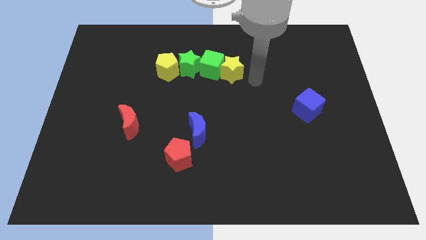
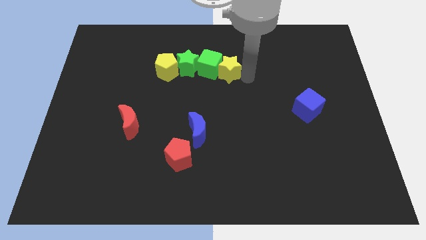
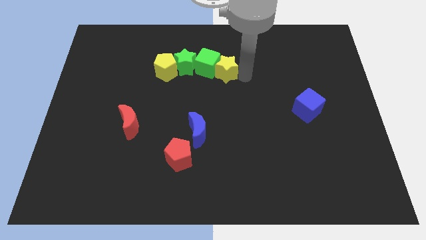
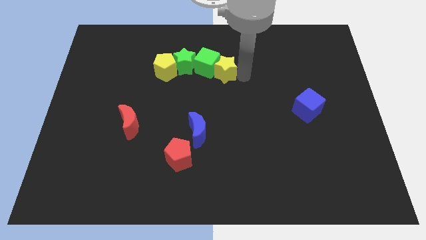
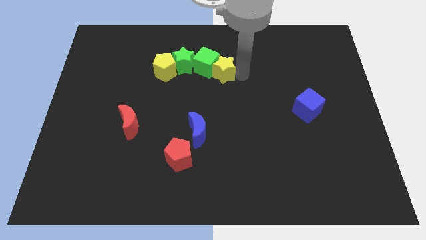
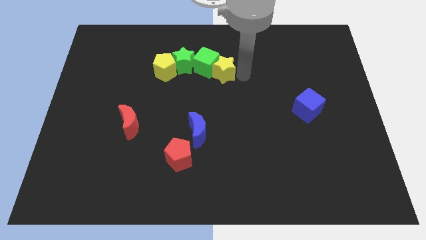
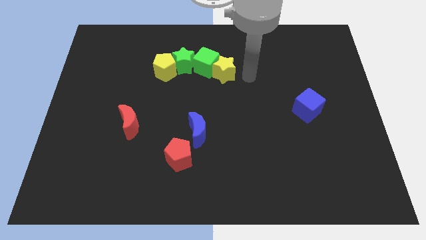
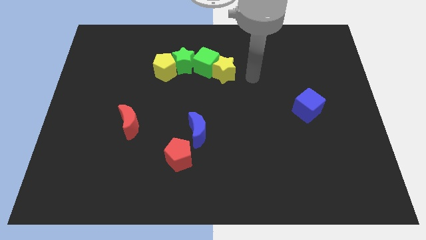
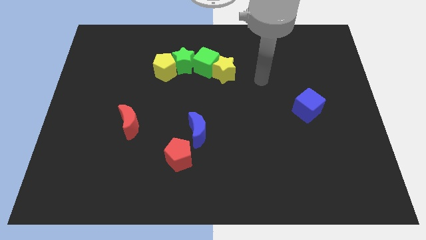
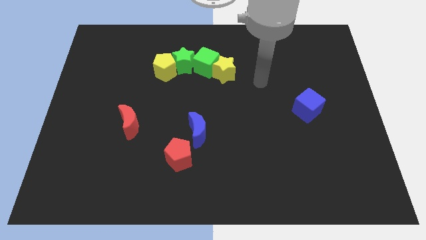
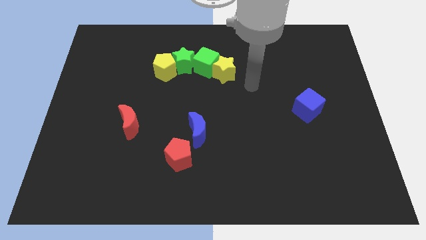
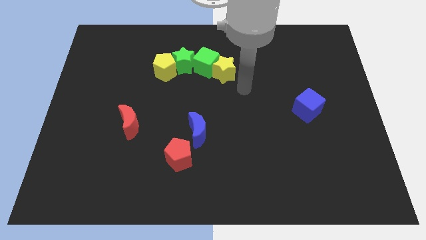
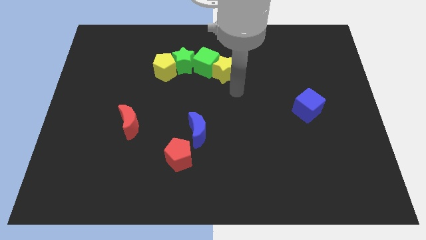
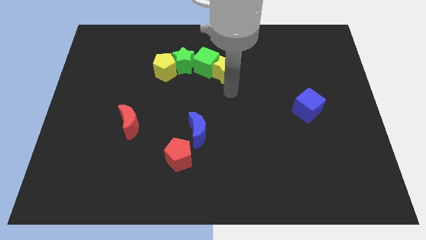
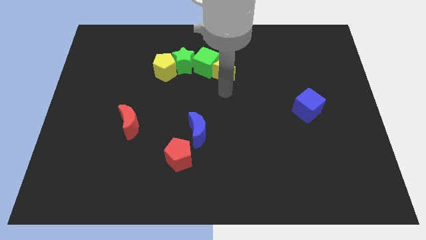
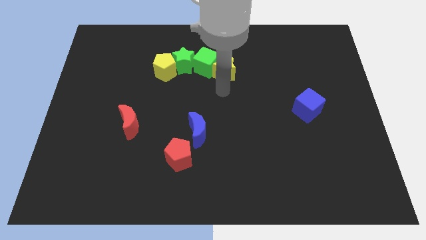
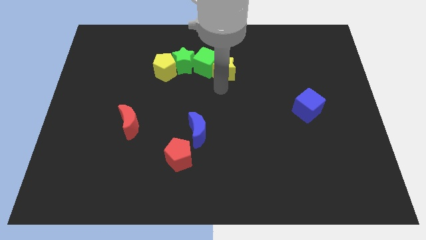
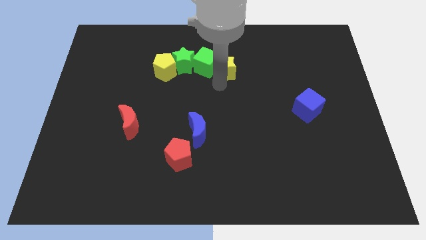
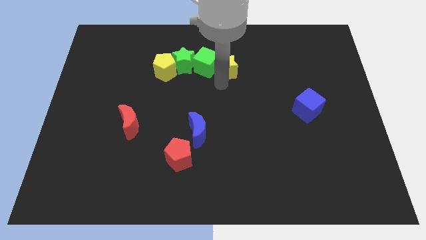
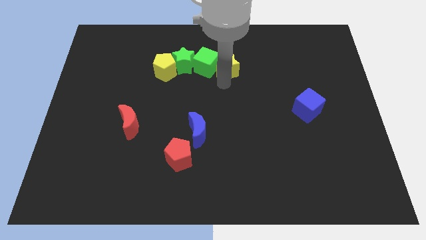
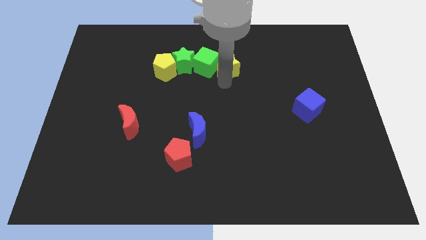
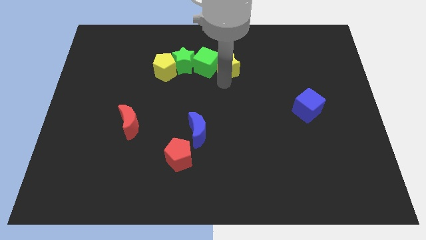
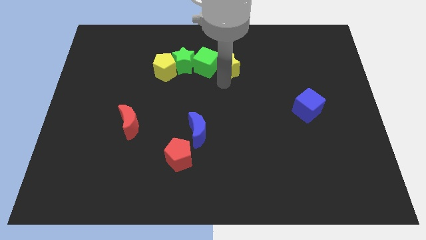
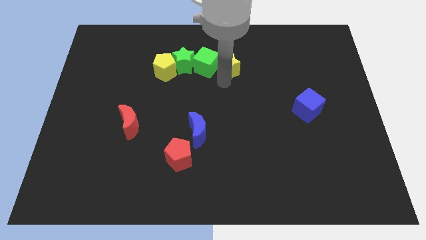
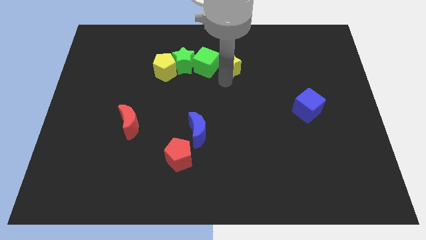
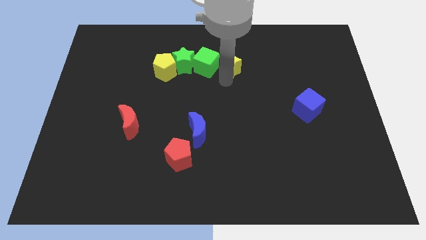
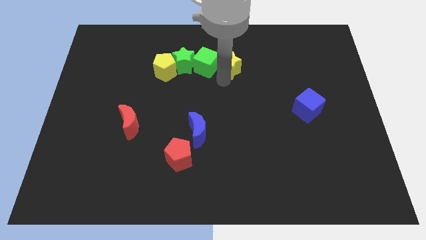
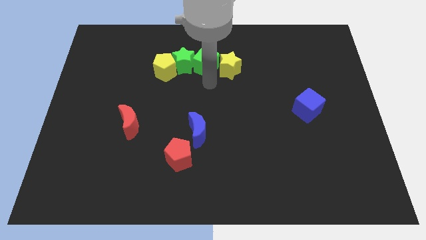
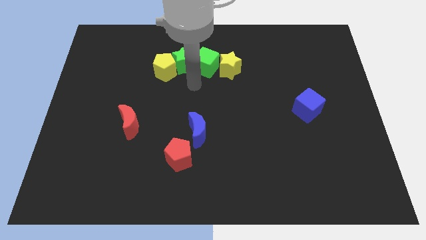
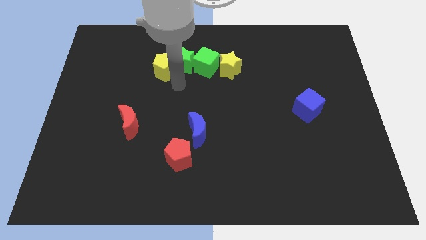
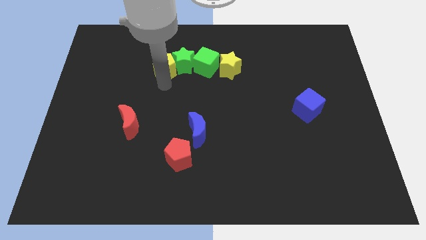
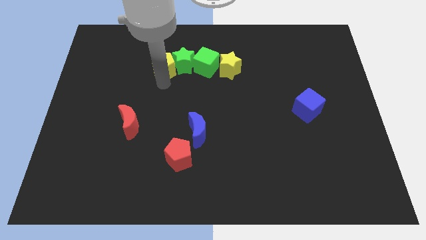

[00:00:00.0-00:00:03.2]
slightly push the yellow star away from the green cube

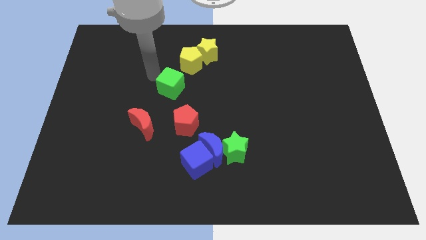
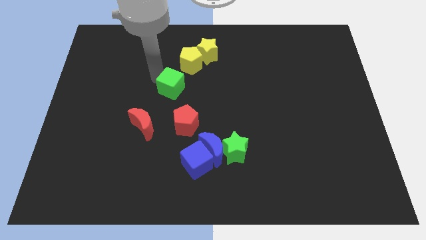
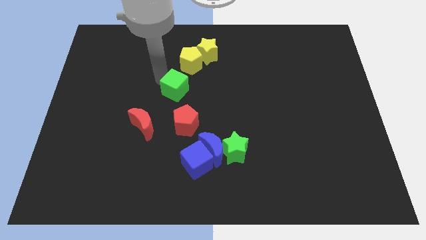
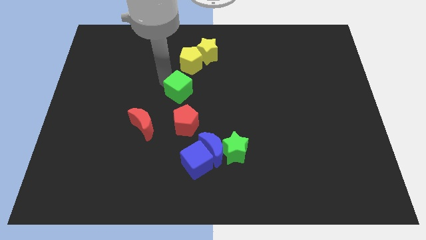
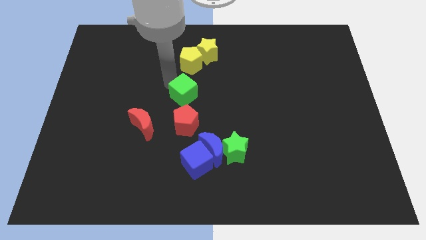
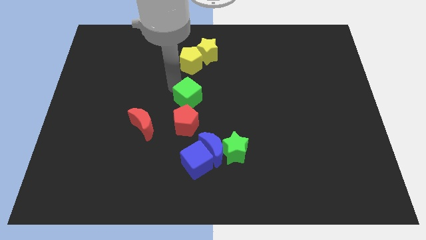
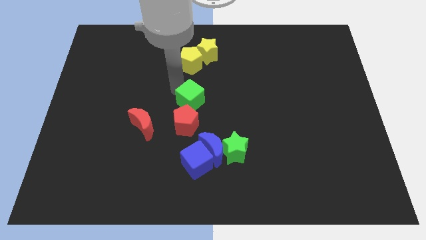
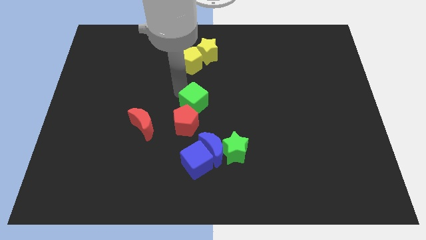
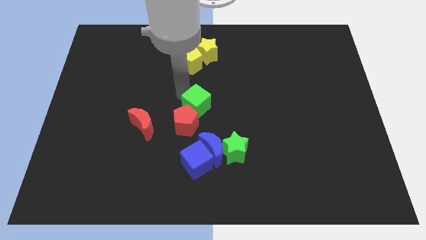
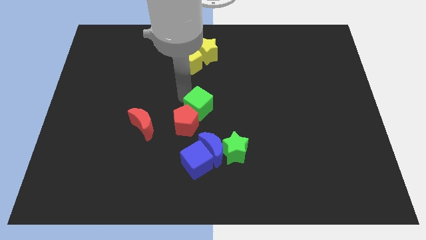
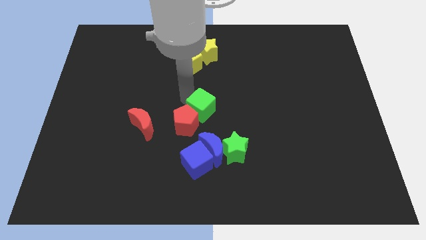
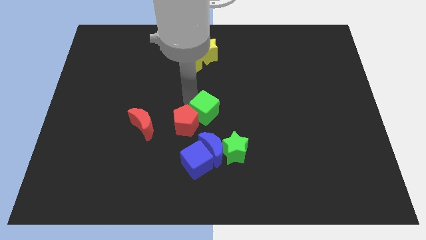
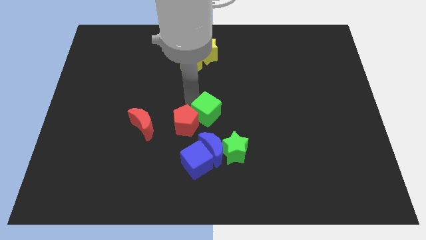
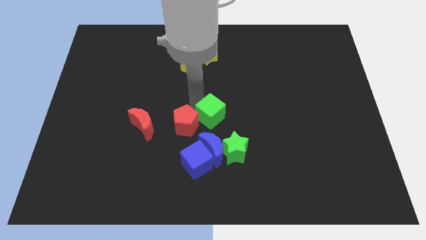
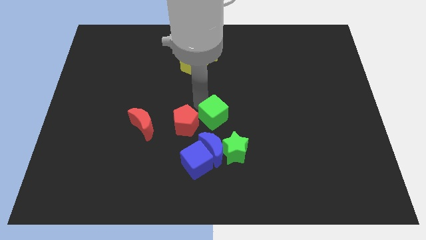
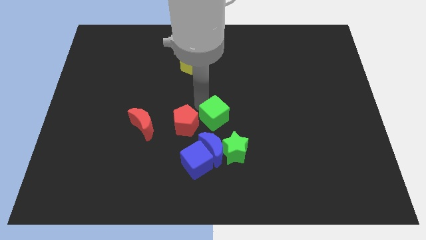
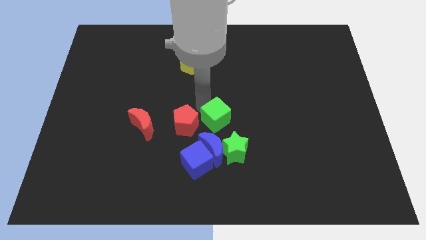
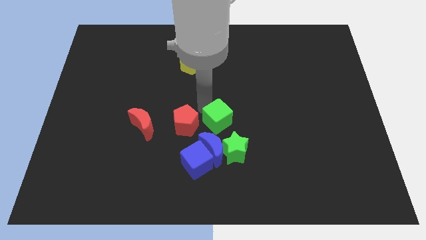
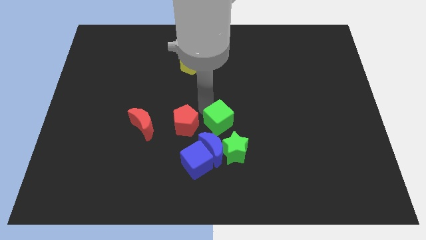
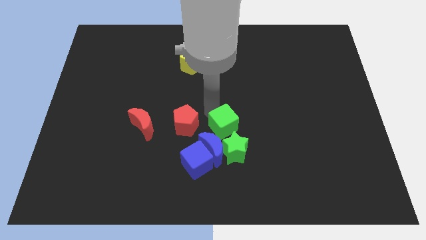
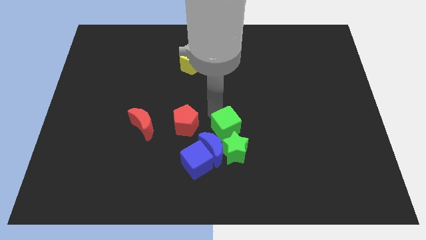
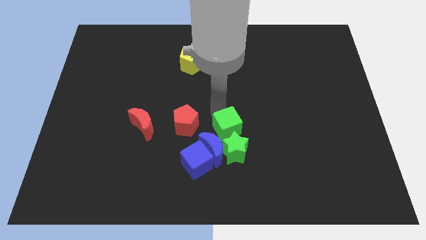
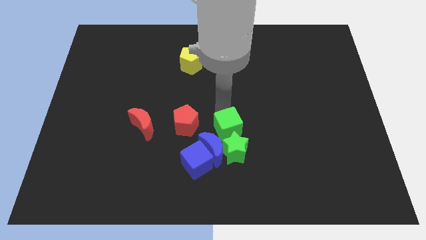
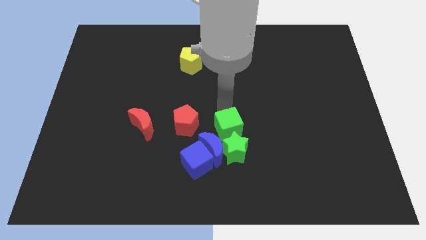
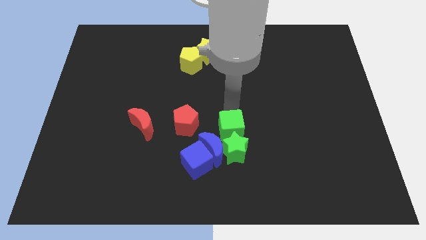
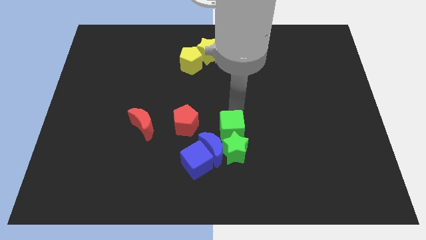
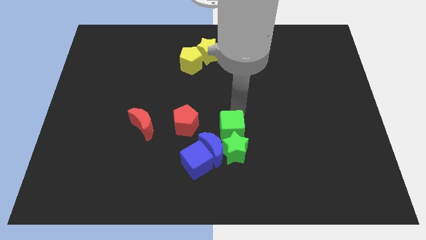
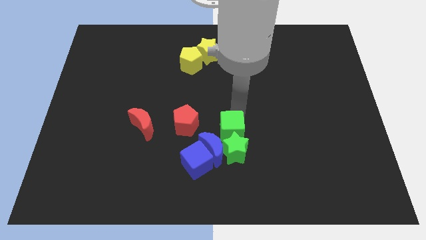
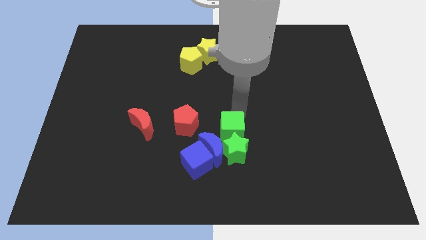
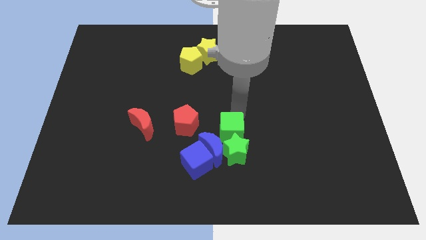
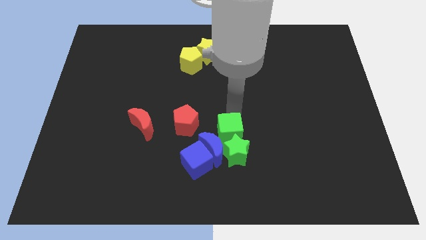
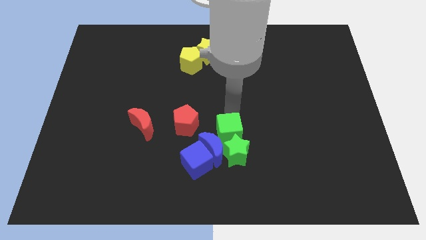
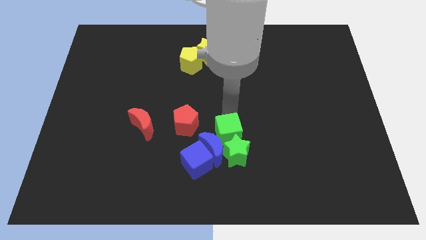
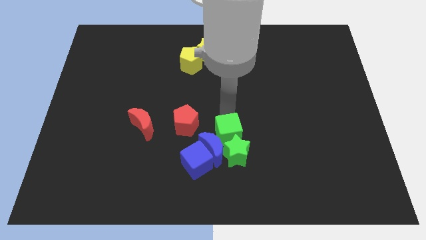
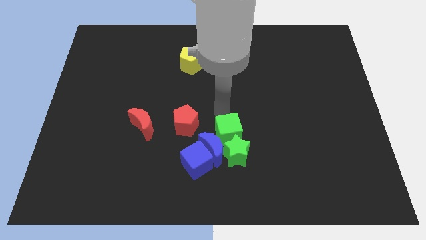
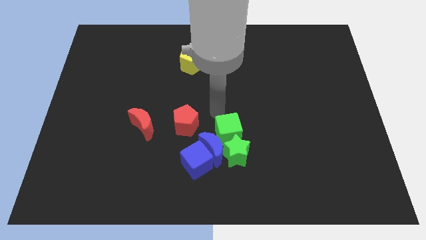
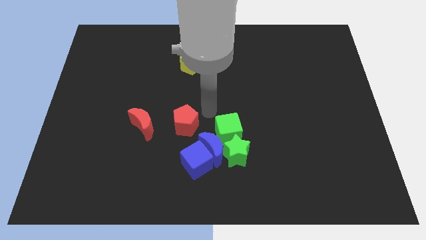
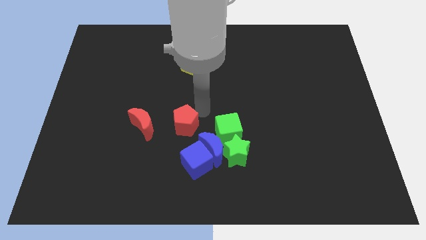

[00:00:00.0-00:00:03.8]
push the green cube into the green star

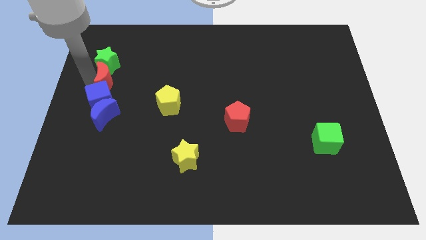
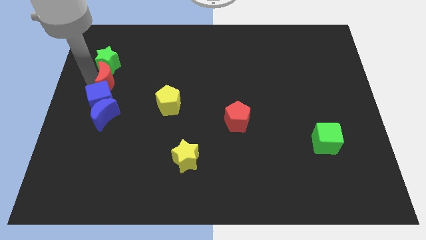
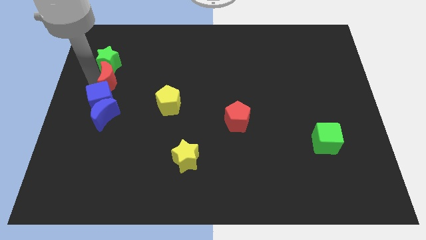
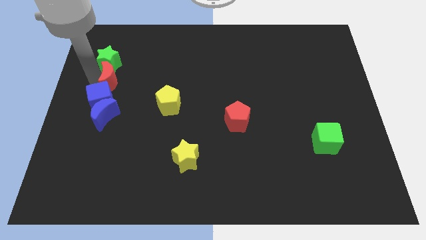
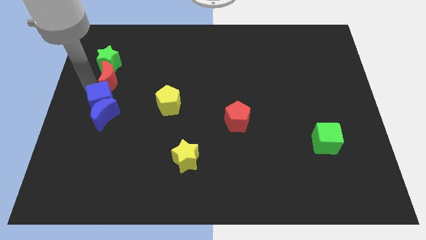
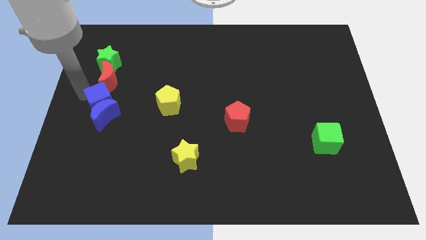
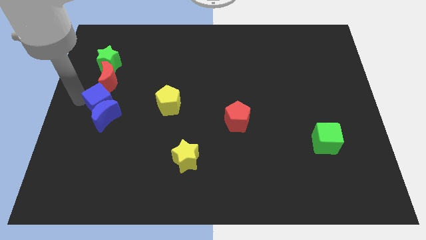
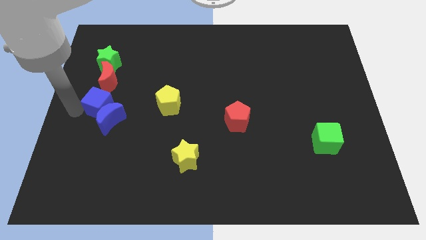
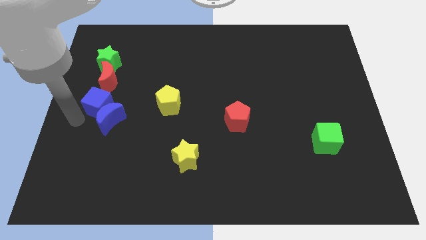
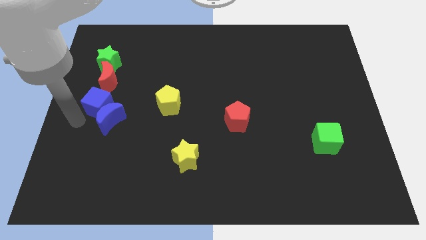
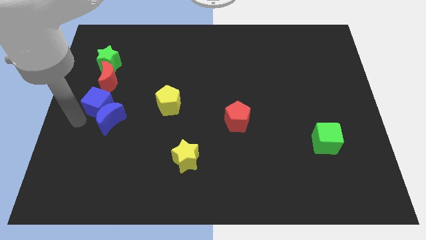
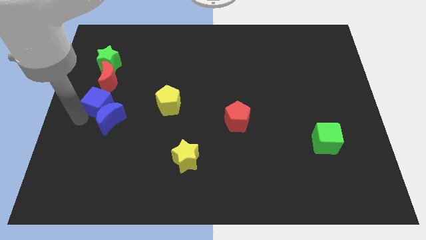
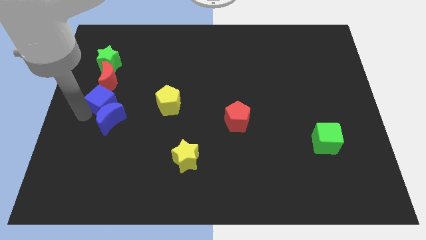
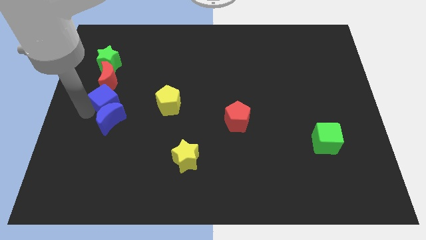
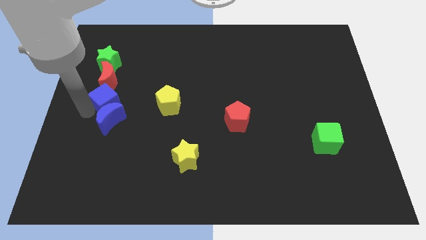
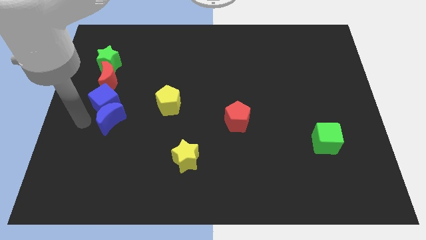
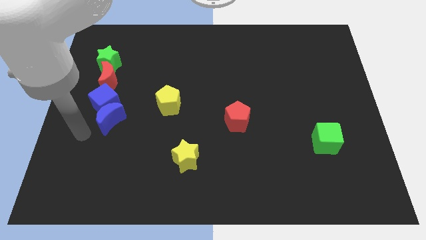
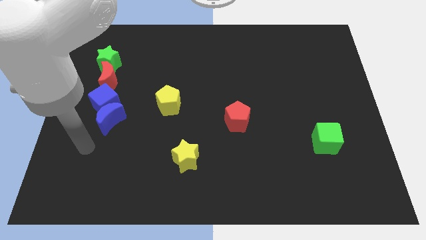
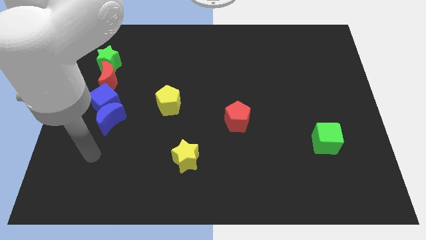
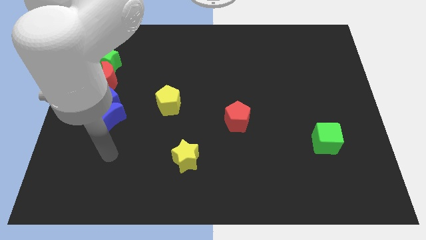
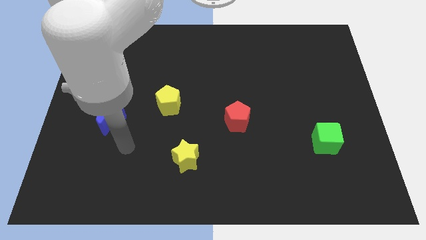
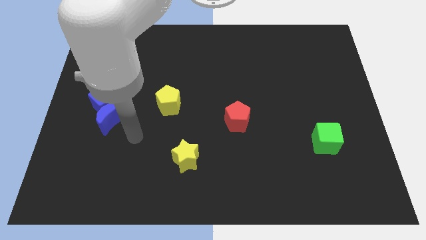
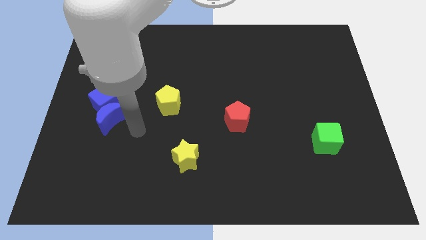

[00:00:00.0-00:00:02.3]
adjust the blue cube to the bottom of the red moon
